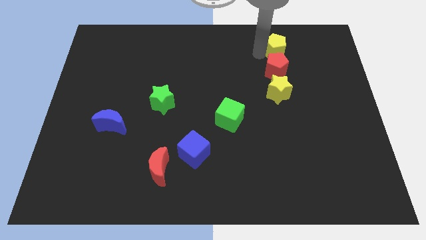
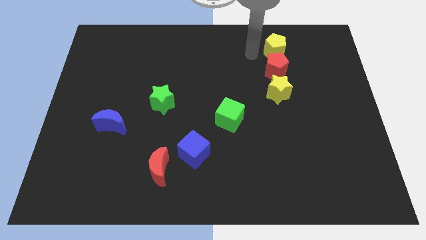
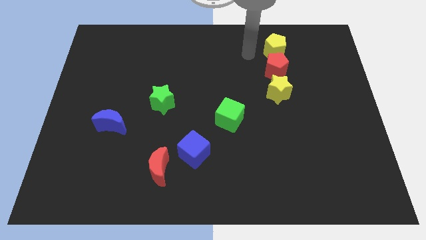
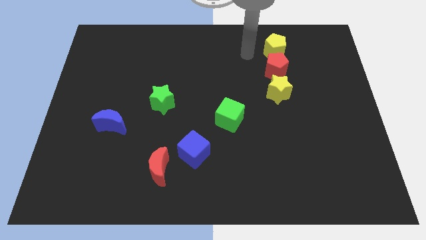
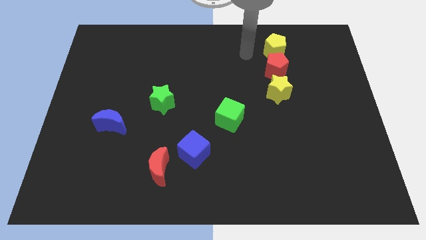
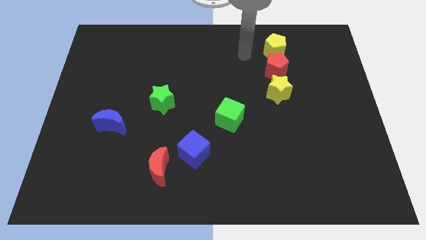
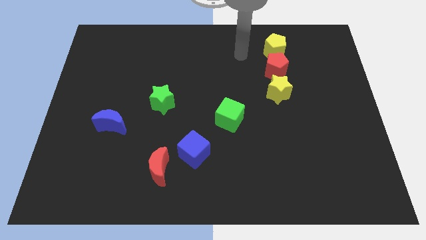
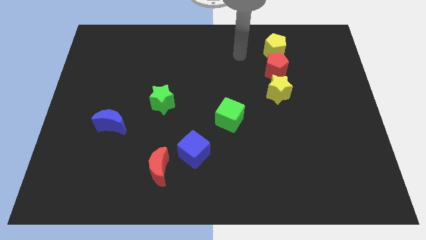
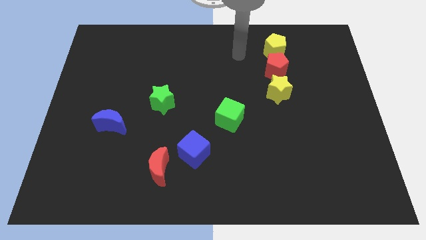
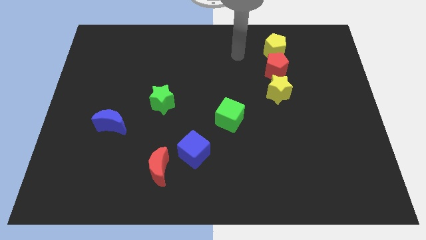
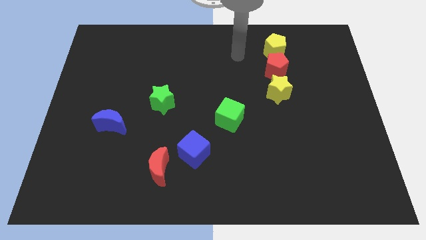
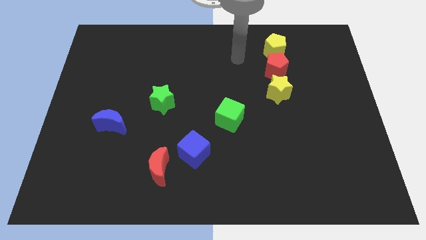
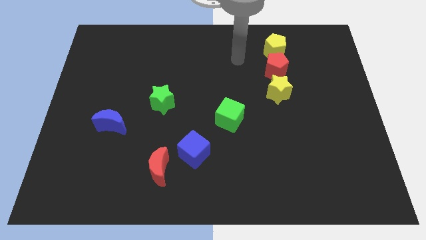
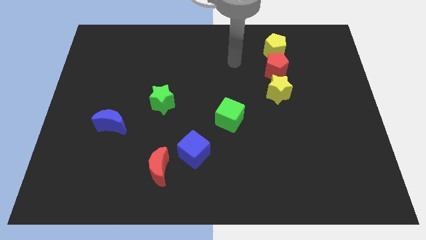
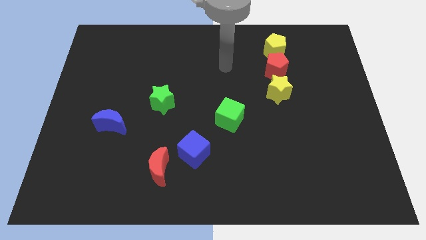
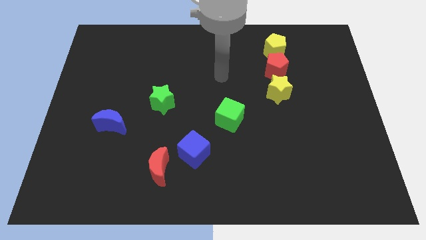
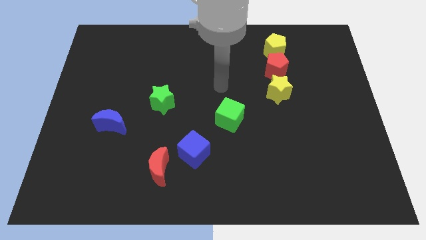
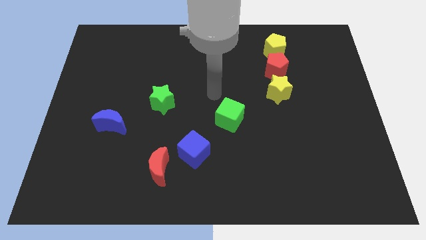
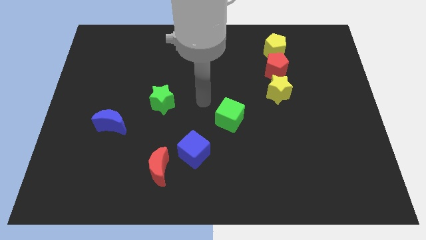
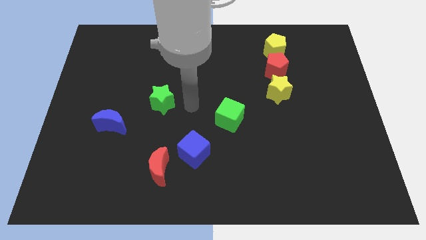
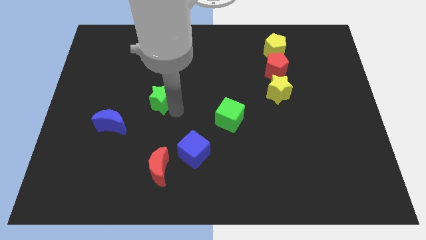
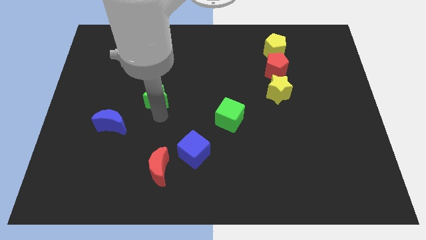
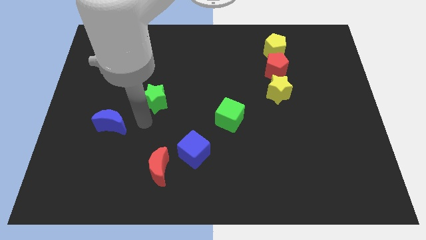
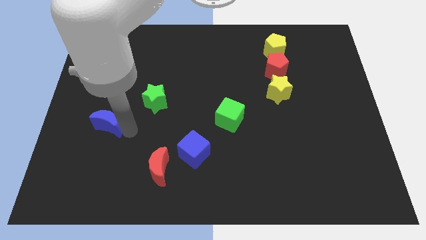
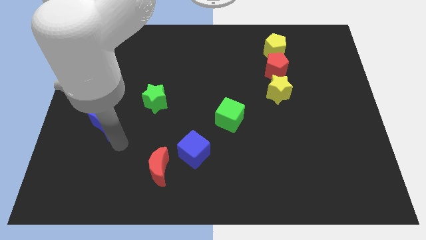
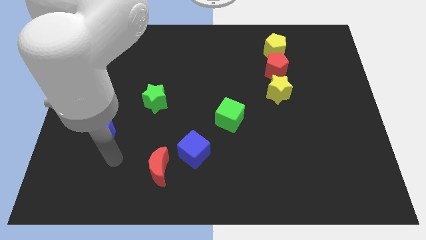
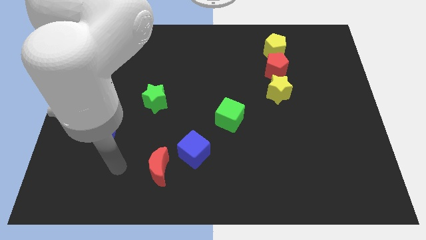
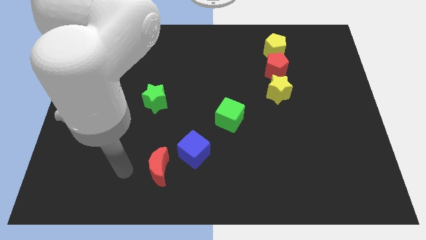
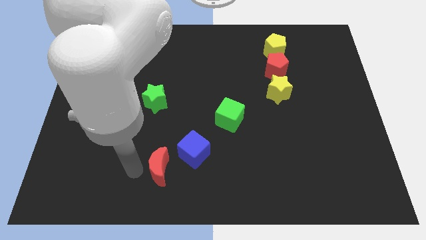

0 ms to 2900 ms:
move the arm left of the red moon

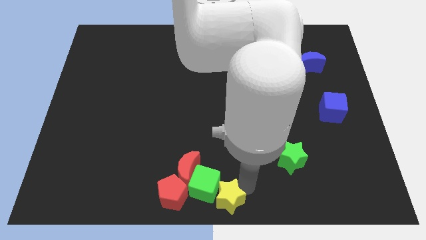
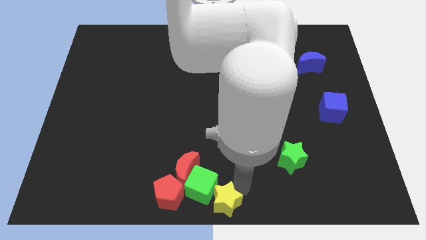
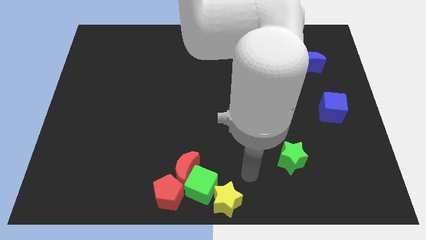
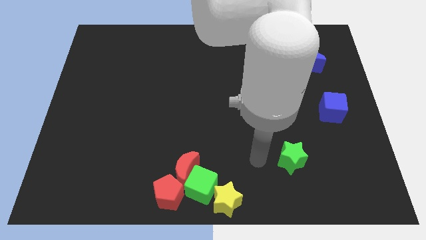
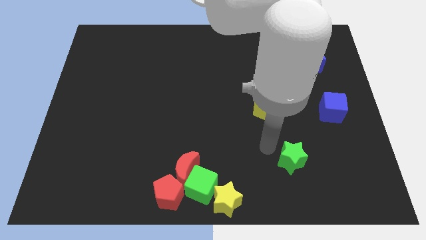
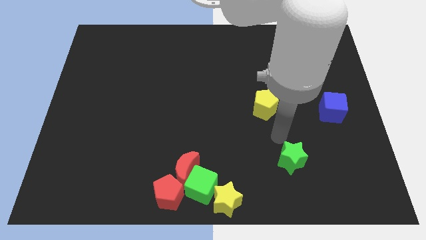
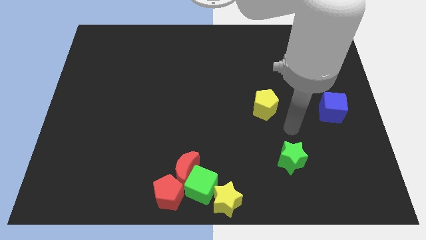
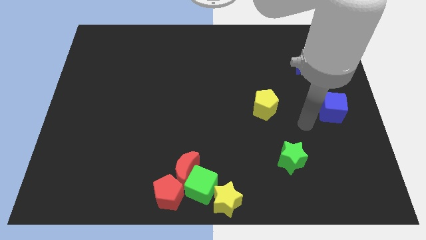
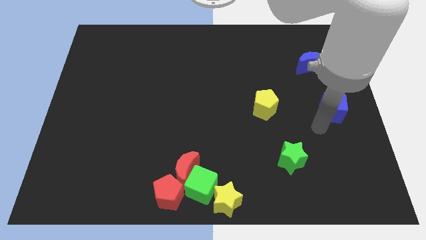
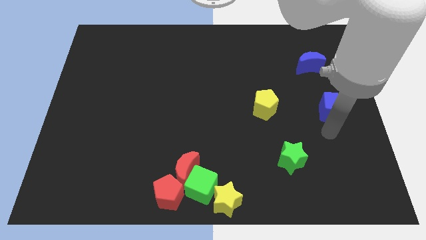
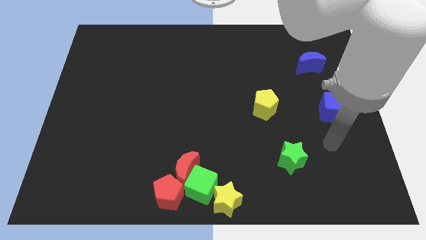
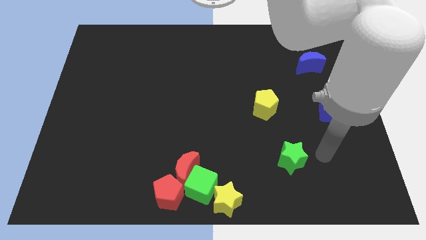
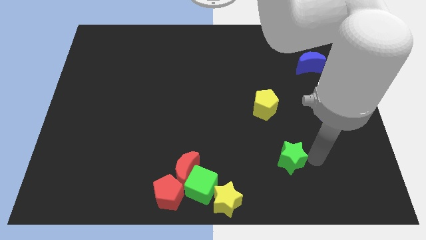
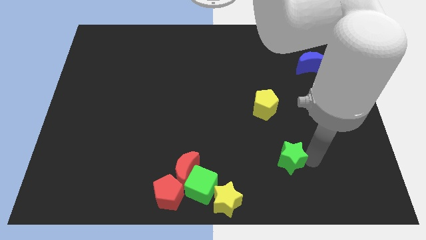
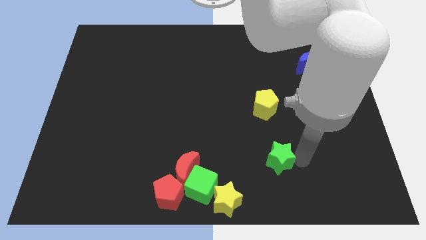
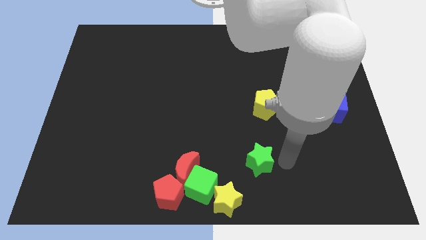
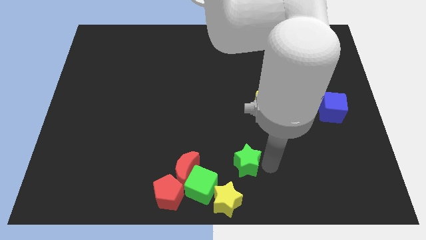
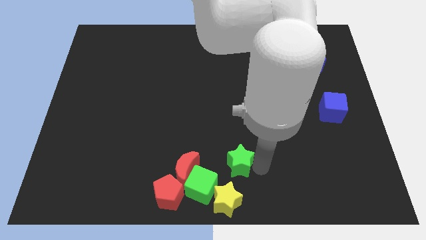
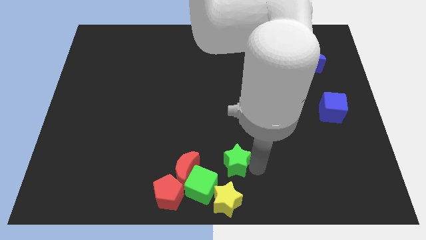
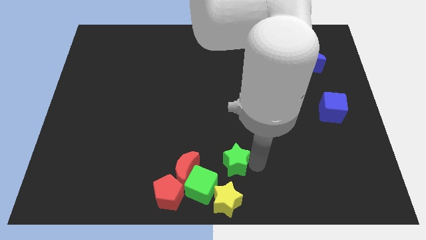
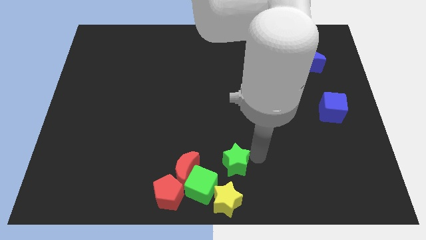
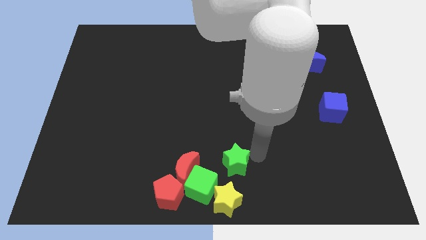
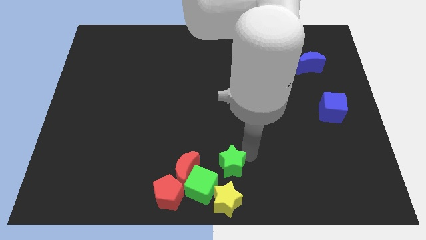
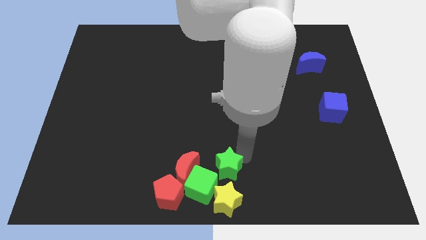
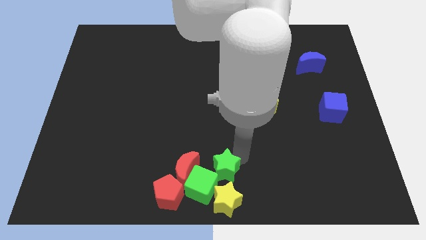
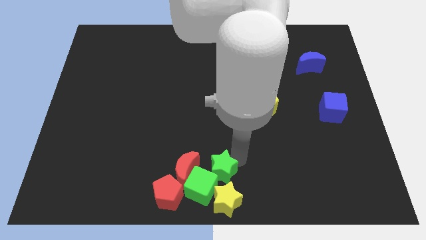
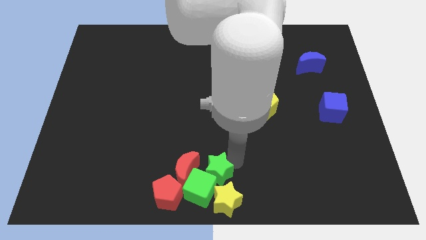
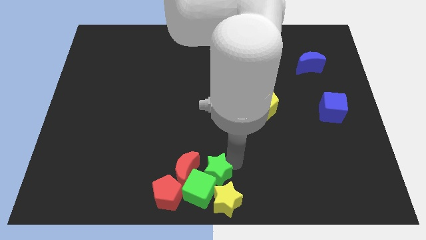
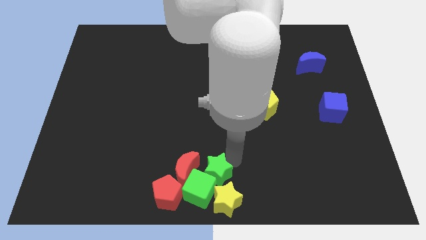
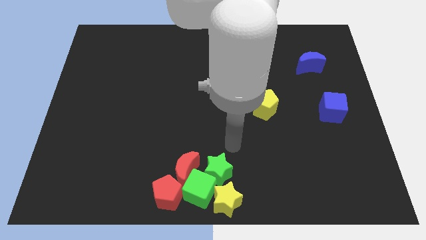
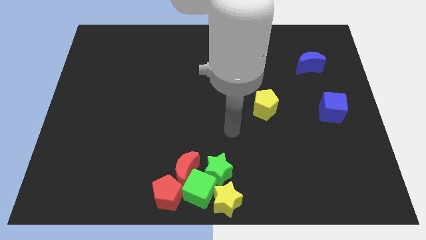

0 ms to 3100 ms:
push the green star diagonally to the top right of the green cube

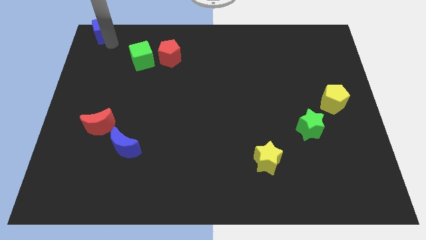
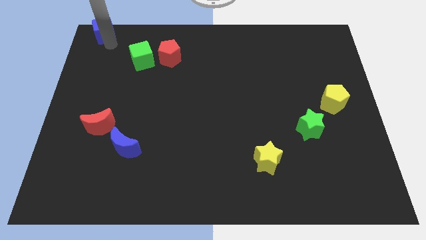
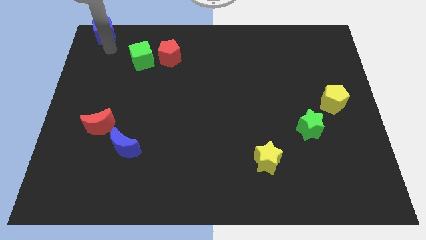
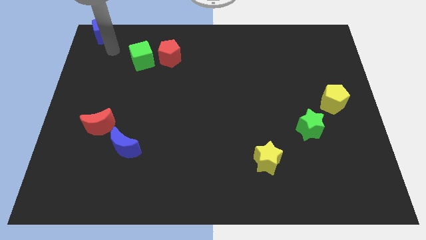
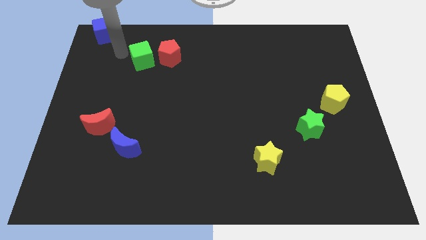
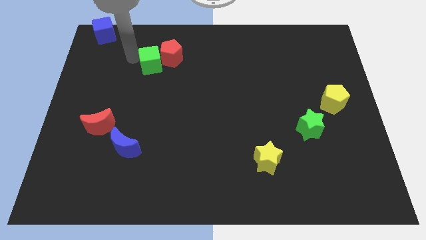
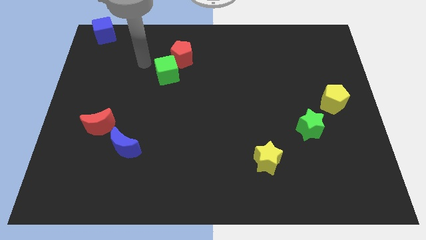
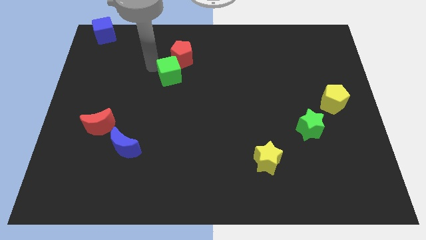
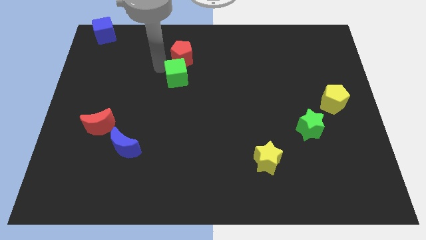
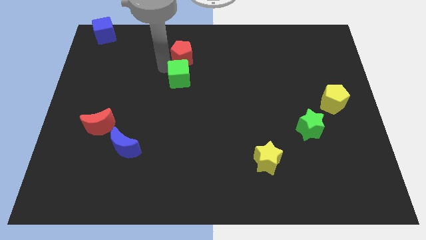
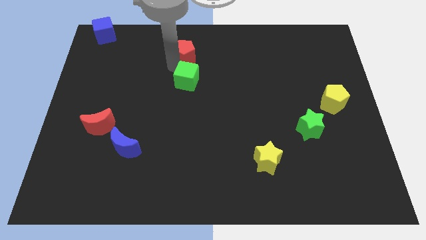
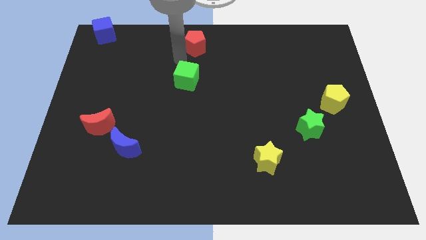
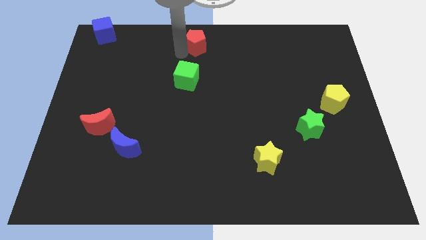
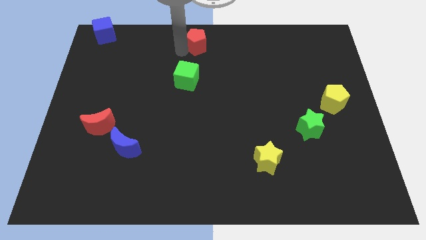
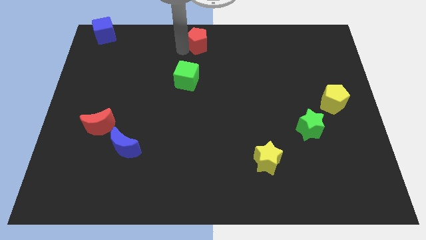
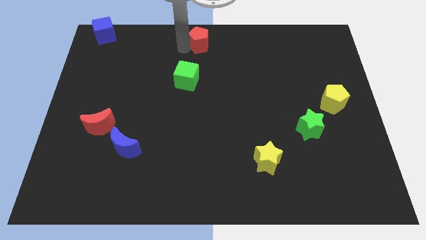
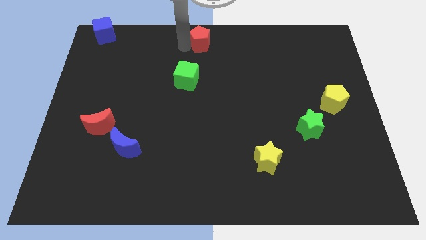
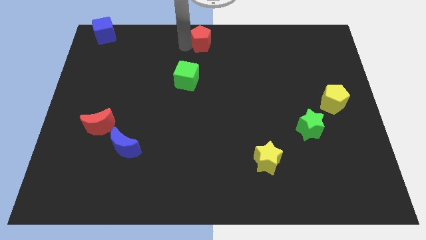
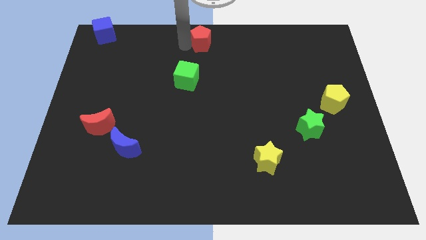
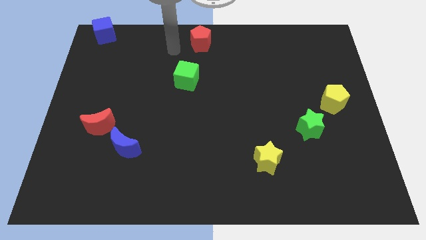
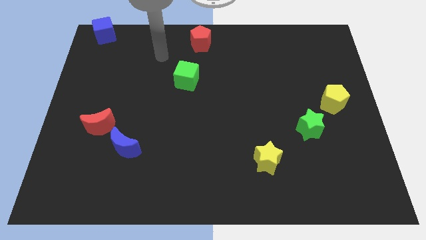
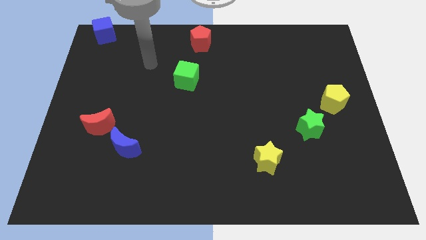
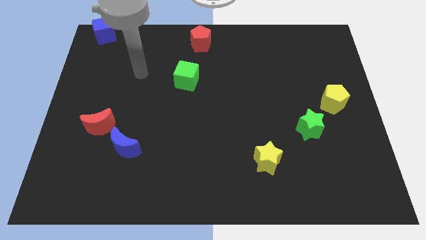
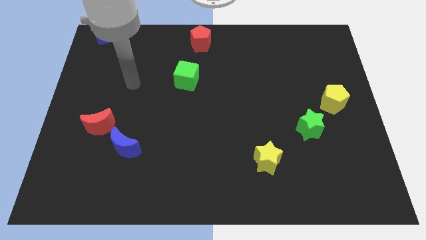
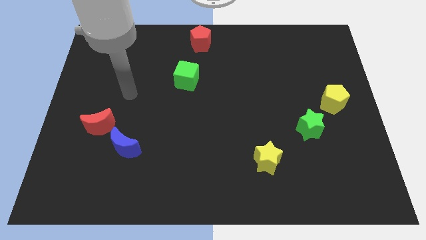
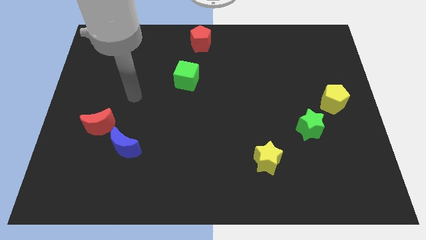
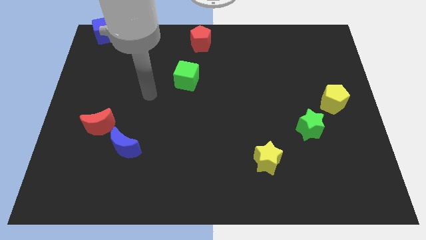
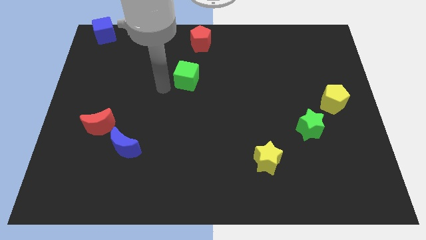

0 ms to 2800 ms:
move red pentagon to the top center of the board
